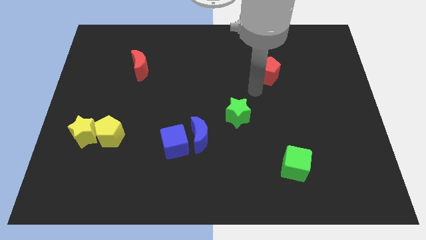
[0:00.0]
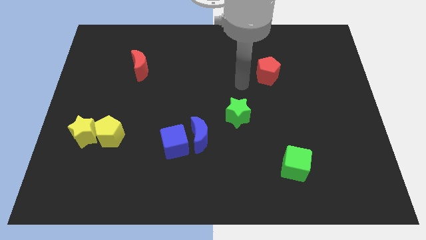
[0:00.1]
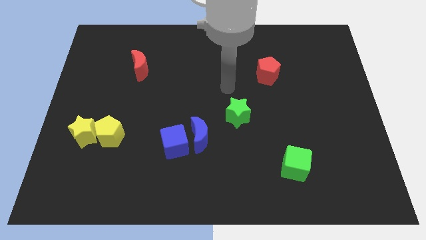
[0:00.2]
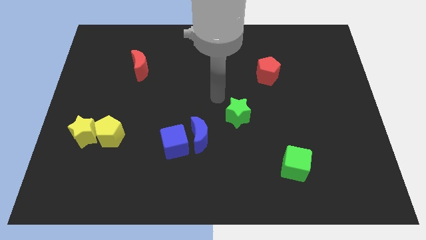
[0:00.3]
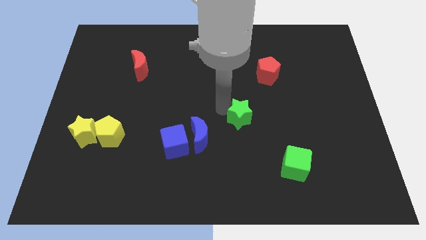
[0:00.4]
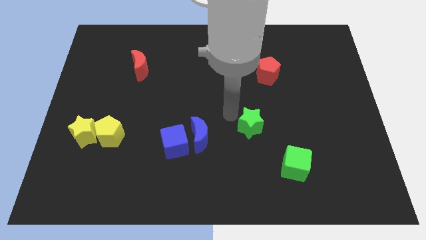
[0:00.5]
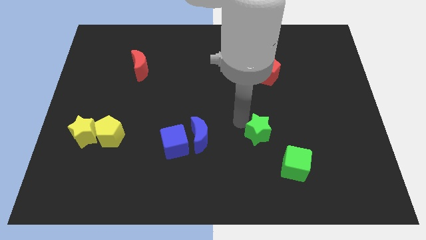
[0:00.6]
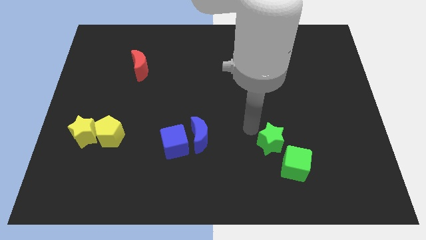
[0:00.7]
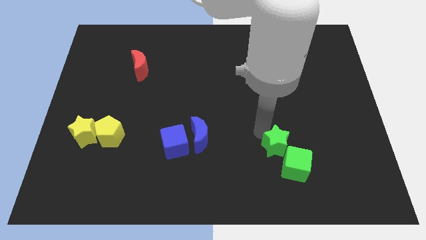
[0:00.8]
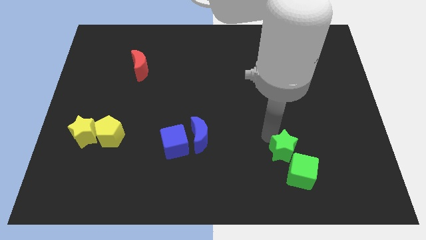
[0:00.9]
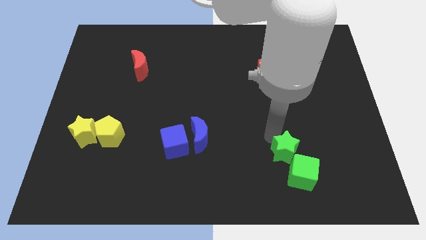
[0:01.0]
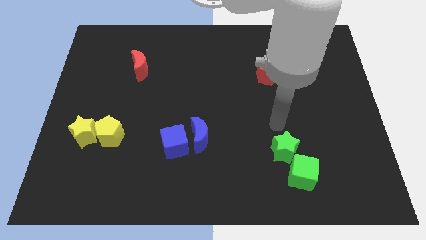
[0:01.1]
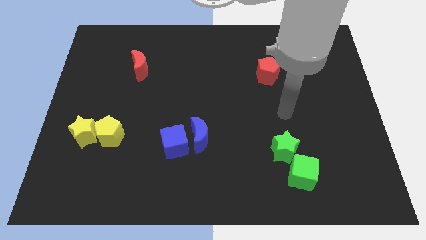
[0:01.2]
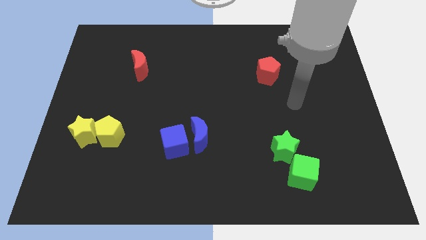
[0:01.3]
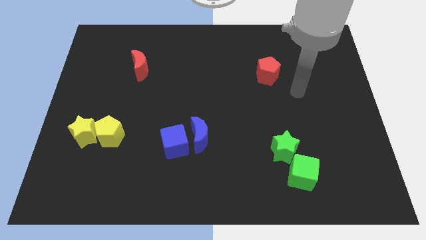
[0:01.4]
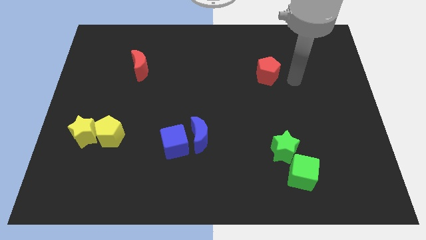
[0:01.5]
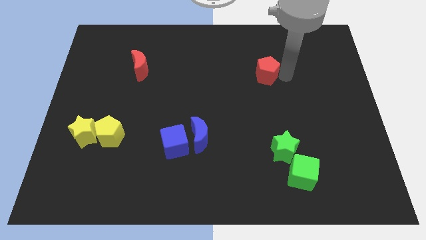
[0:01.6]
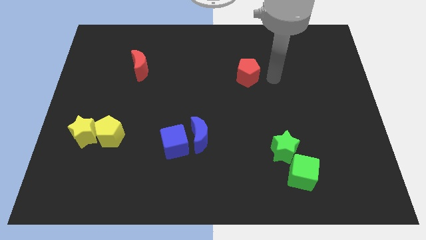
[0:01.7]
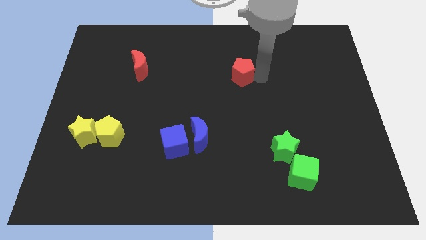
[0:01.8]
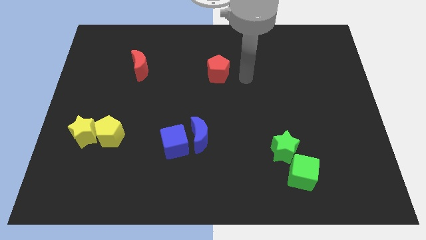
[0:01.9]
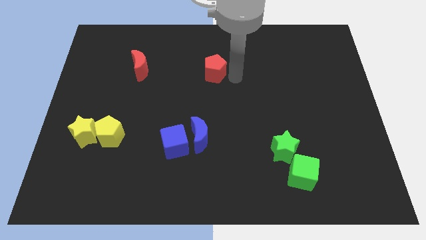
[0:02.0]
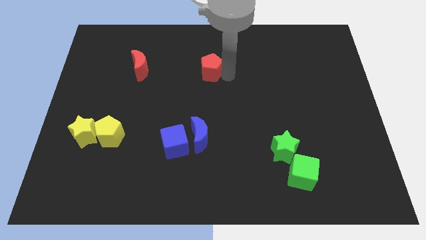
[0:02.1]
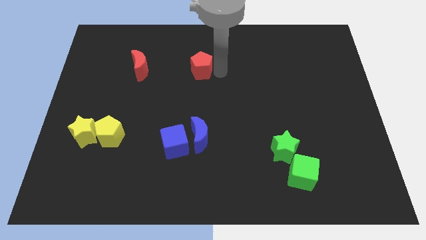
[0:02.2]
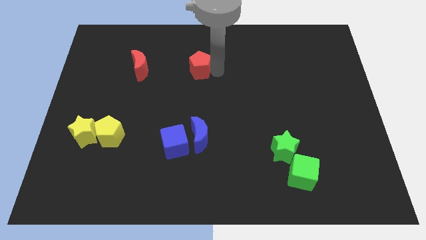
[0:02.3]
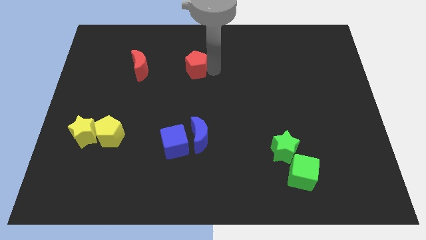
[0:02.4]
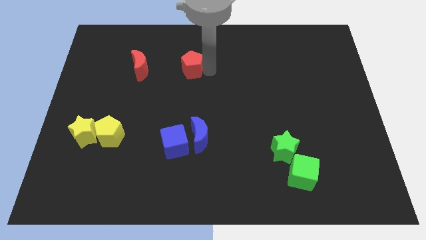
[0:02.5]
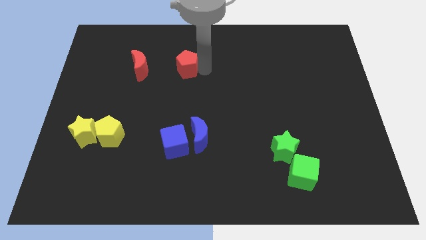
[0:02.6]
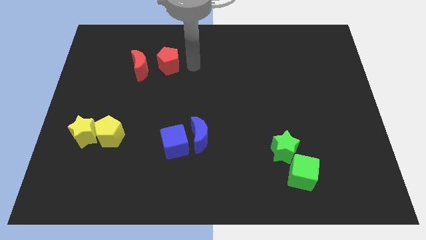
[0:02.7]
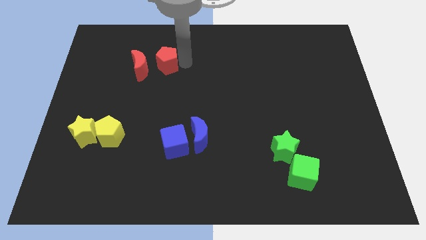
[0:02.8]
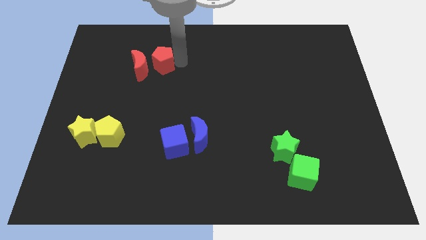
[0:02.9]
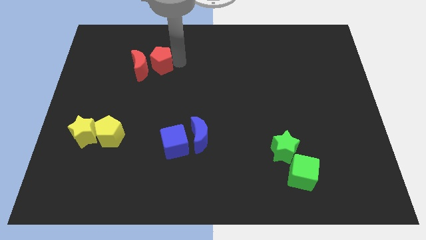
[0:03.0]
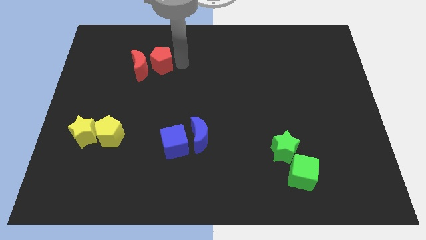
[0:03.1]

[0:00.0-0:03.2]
place the red pentagon to the right of the red moon

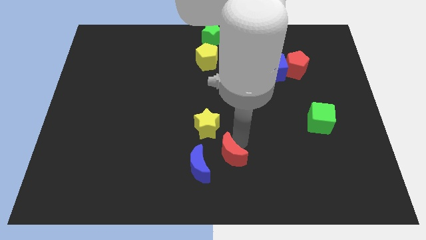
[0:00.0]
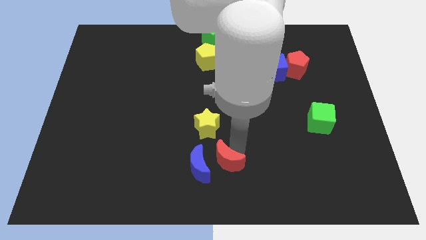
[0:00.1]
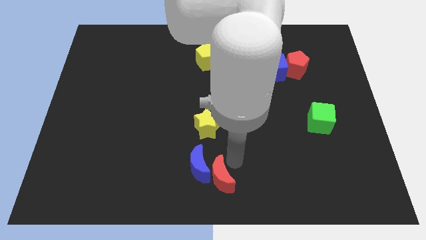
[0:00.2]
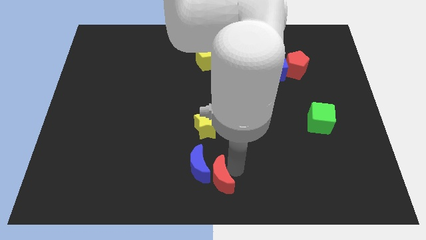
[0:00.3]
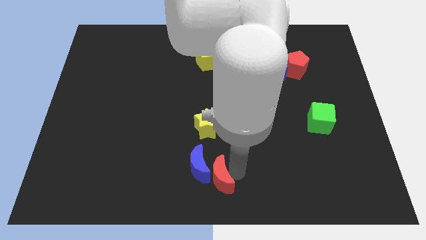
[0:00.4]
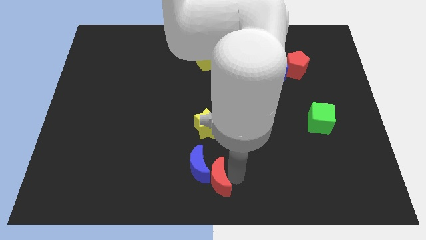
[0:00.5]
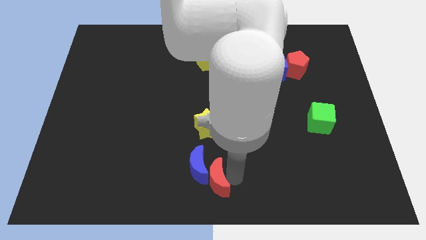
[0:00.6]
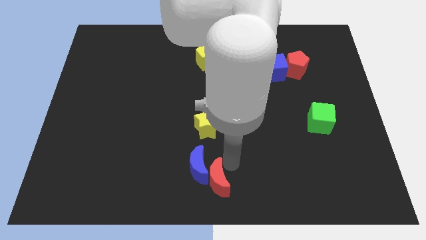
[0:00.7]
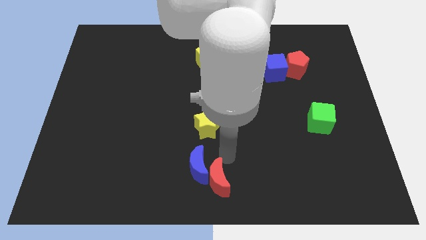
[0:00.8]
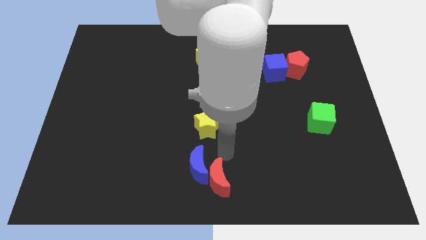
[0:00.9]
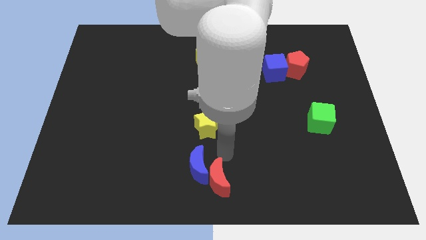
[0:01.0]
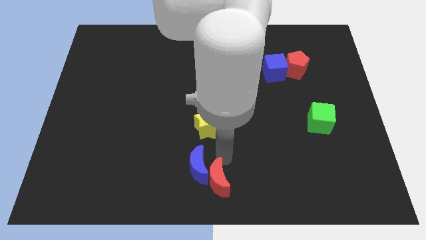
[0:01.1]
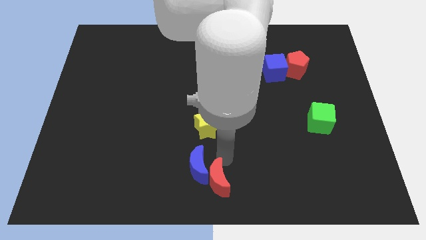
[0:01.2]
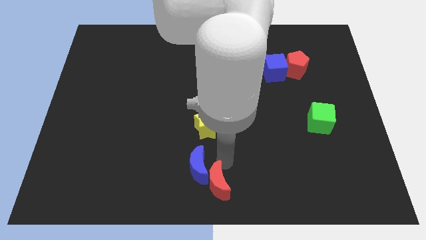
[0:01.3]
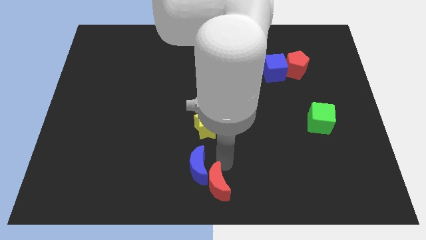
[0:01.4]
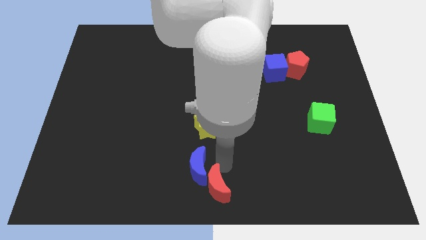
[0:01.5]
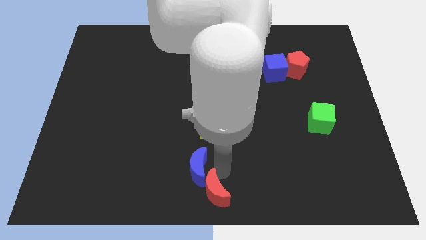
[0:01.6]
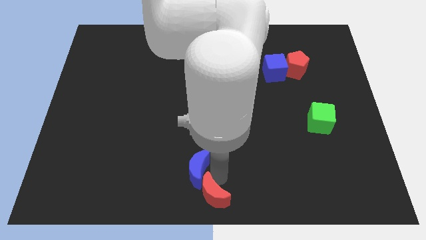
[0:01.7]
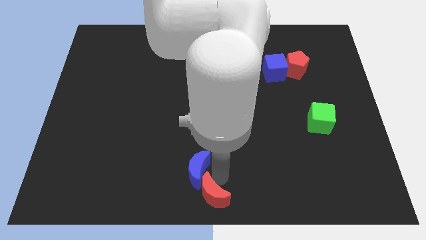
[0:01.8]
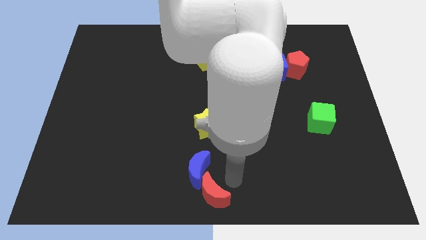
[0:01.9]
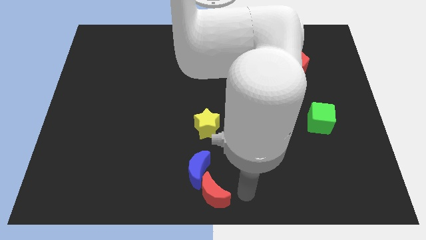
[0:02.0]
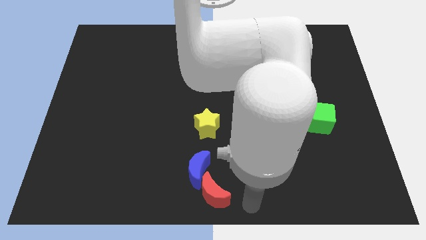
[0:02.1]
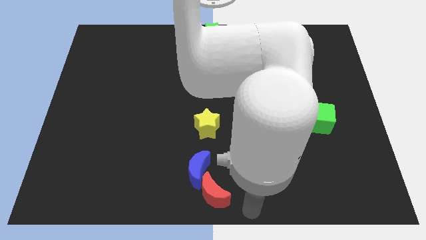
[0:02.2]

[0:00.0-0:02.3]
push the red crescent to the bottom right corner of the blue crescnet

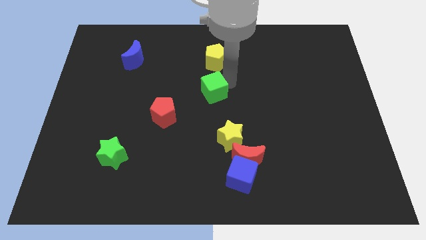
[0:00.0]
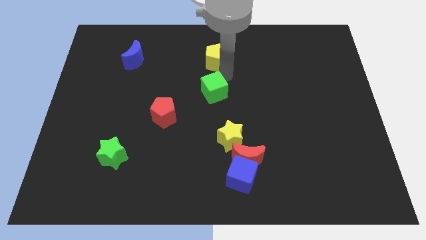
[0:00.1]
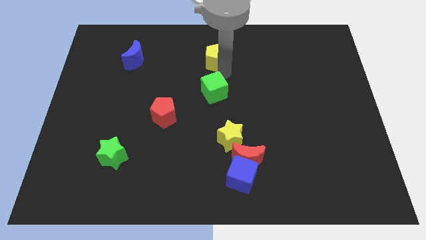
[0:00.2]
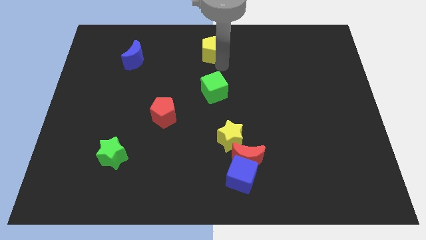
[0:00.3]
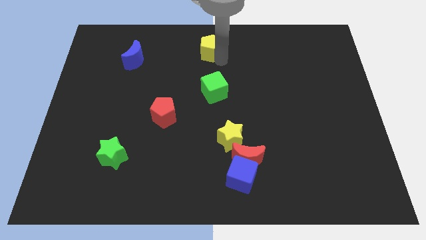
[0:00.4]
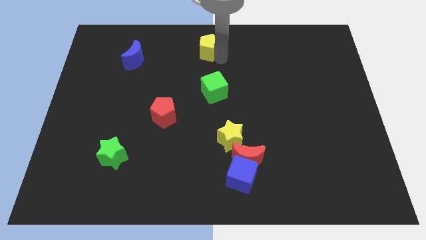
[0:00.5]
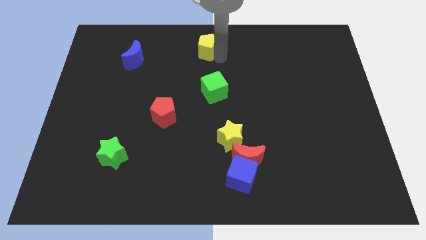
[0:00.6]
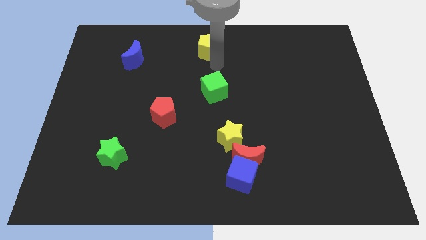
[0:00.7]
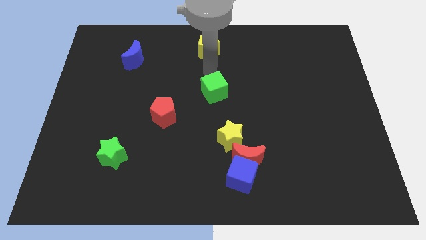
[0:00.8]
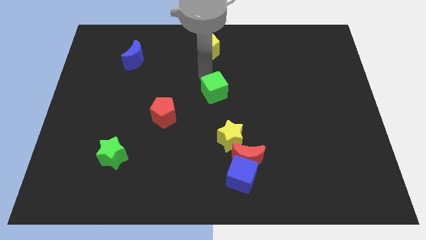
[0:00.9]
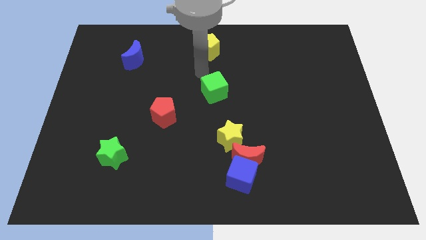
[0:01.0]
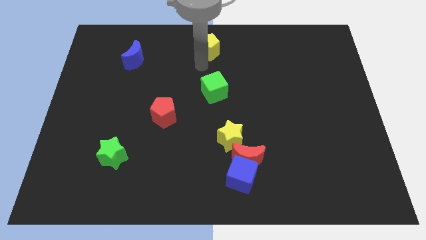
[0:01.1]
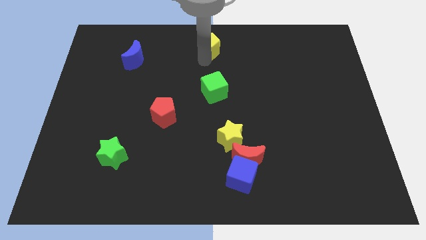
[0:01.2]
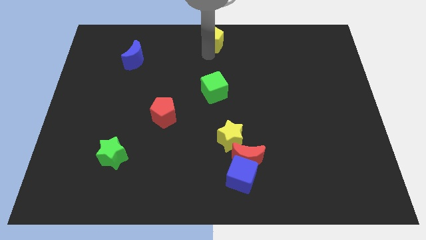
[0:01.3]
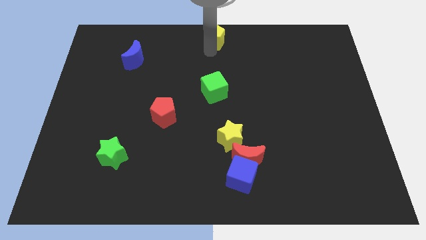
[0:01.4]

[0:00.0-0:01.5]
push the yellow pentagon to the top middle of the board

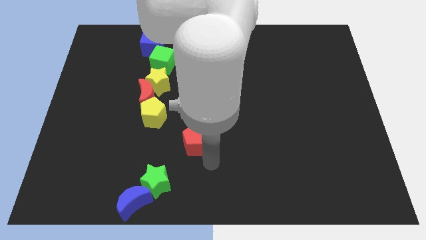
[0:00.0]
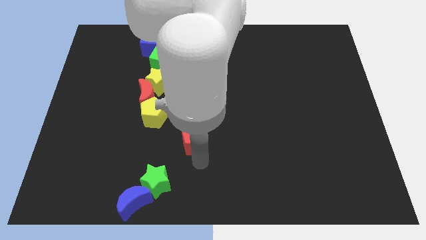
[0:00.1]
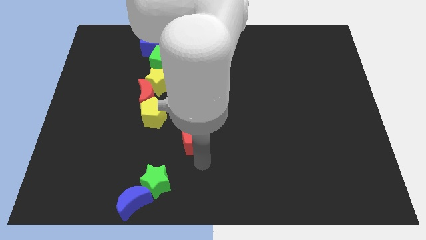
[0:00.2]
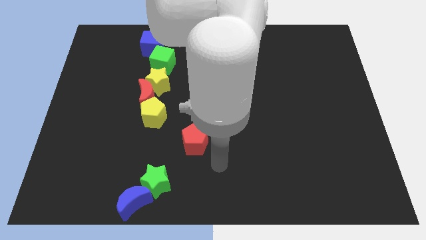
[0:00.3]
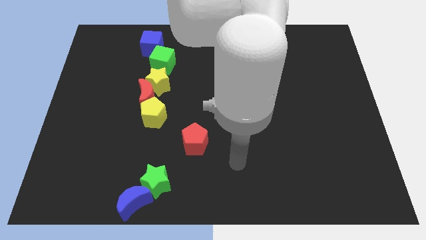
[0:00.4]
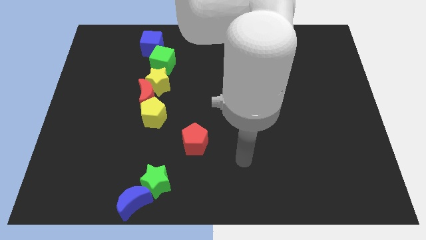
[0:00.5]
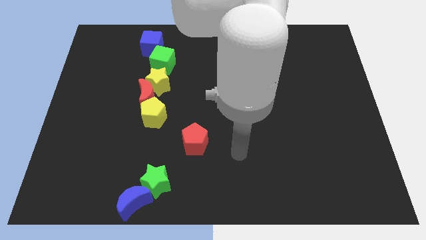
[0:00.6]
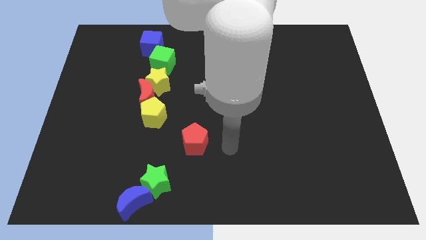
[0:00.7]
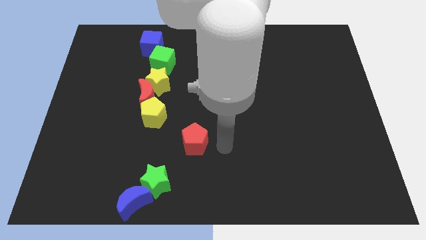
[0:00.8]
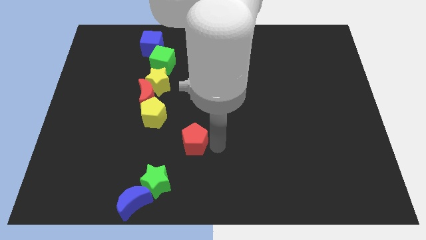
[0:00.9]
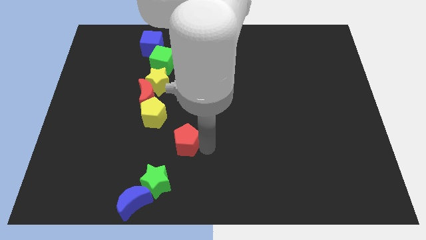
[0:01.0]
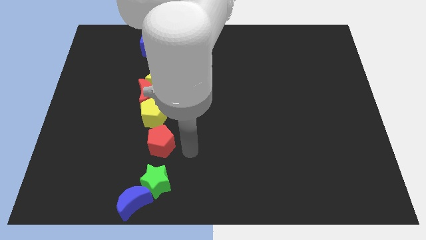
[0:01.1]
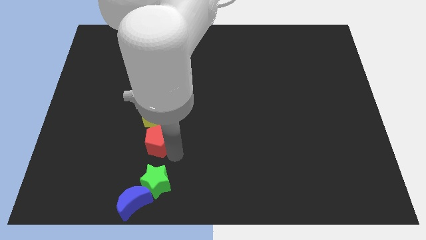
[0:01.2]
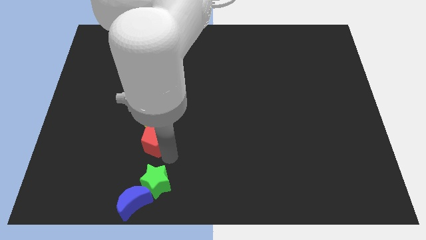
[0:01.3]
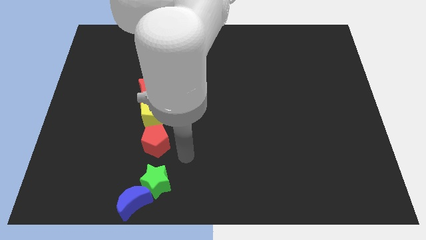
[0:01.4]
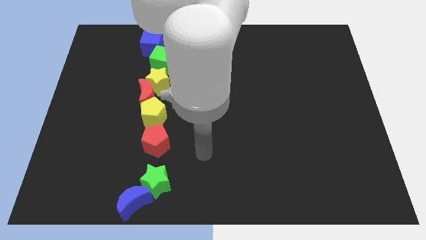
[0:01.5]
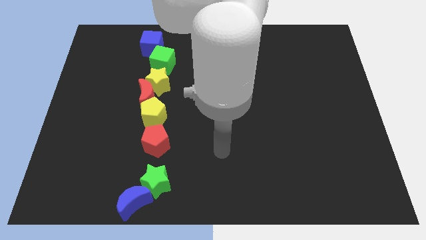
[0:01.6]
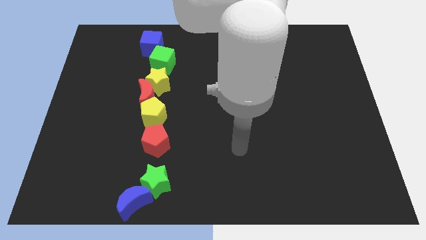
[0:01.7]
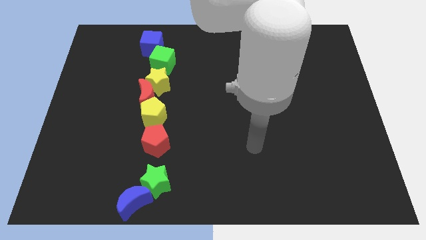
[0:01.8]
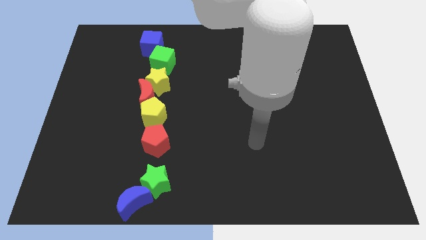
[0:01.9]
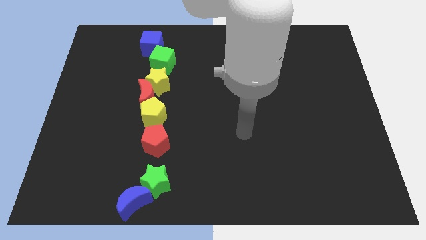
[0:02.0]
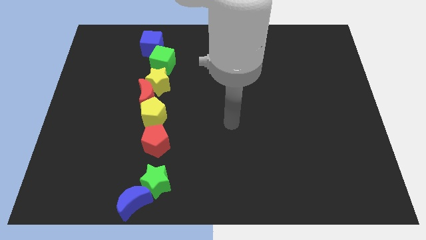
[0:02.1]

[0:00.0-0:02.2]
move the red pentagon bottom of the yellow pentagon
